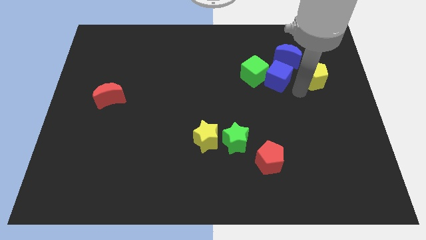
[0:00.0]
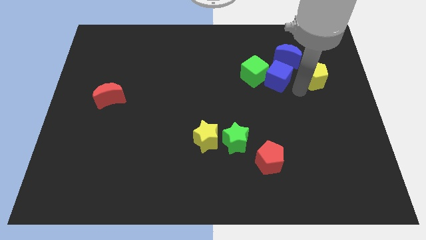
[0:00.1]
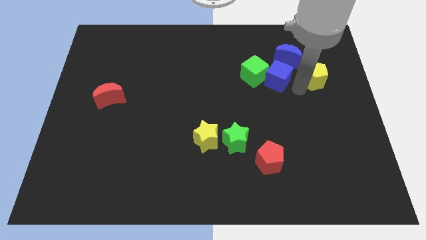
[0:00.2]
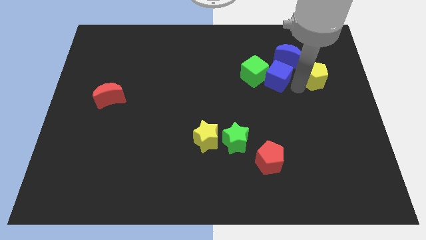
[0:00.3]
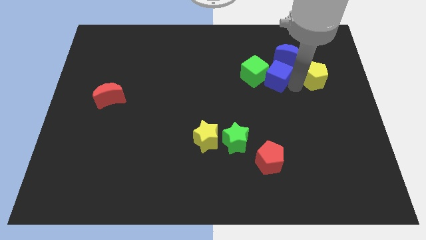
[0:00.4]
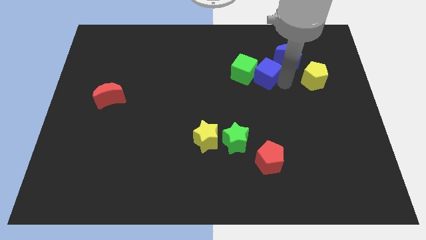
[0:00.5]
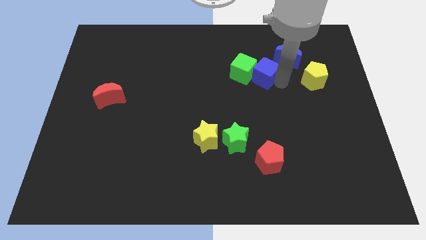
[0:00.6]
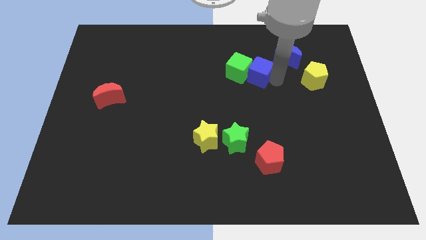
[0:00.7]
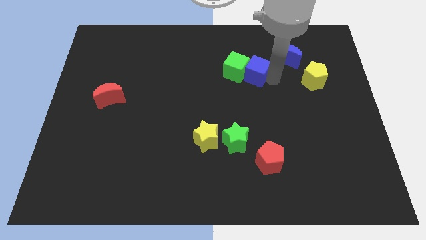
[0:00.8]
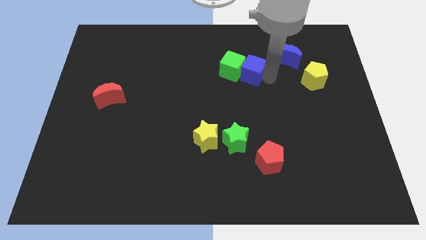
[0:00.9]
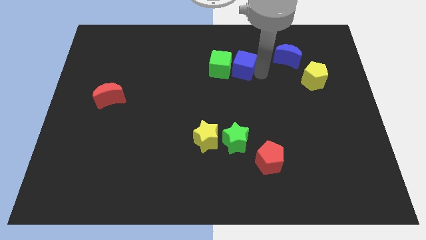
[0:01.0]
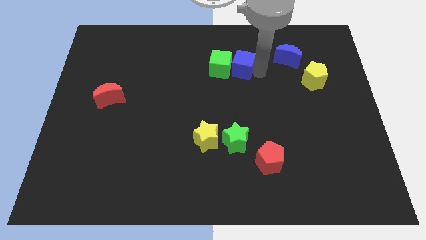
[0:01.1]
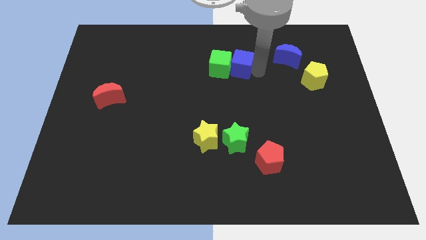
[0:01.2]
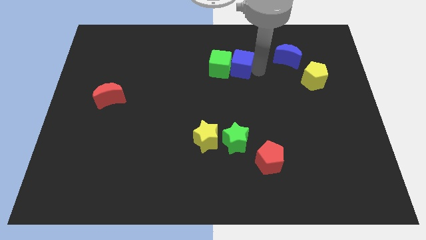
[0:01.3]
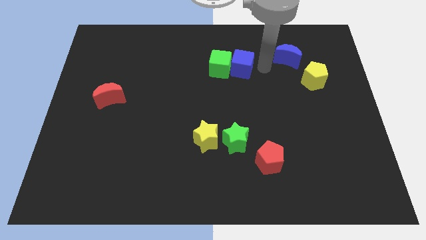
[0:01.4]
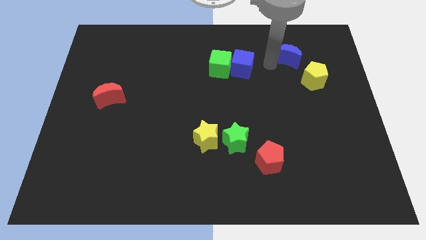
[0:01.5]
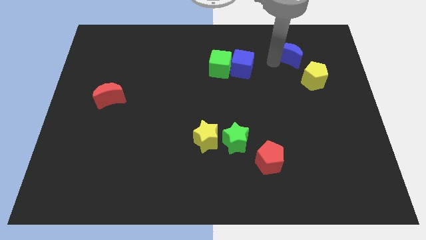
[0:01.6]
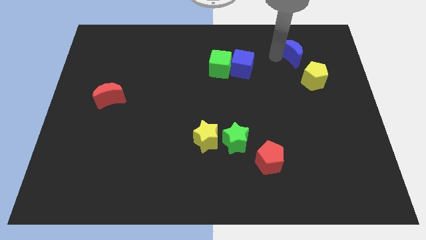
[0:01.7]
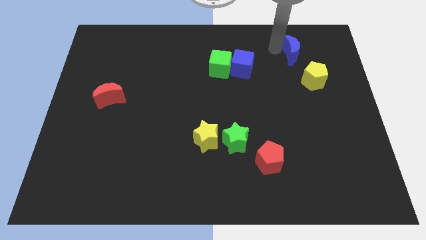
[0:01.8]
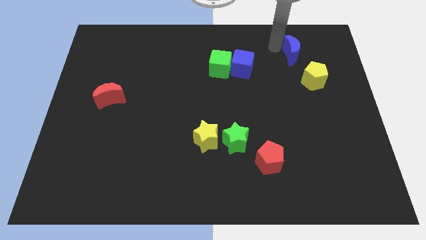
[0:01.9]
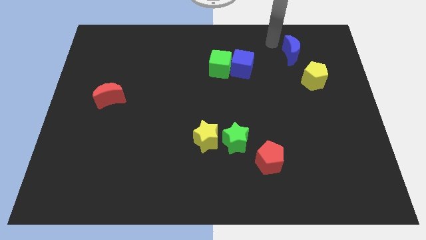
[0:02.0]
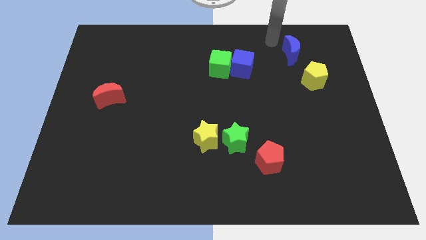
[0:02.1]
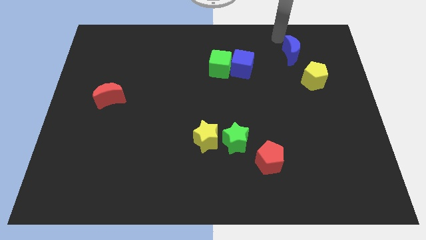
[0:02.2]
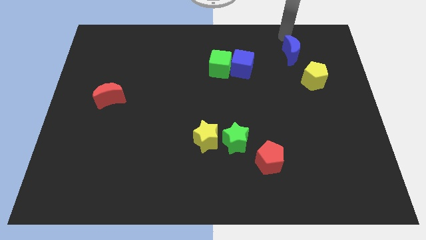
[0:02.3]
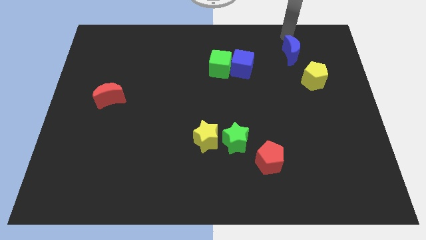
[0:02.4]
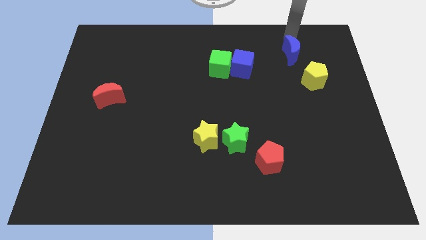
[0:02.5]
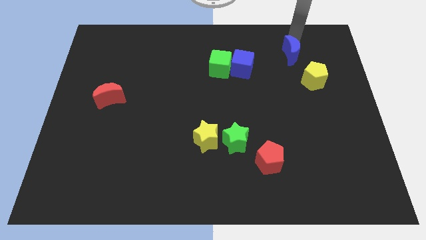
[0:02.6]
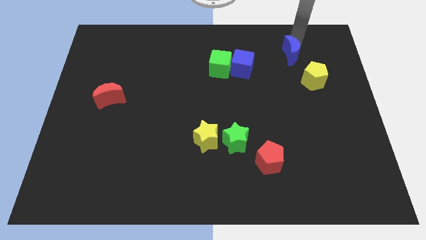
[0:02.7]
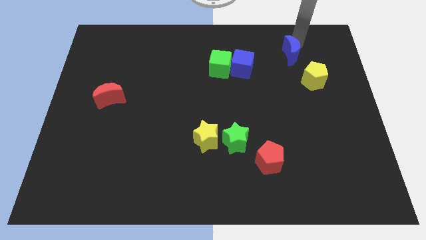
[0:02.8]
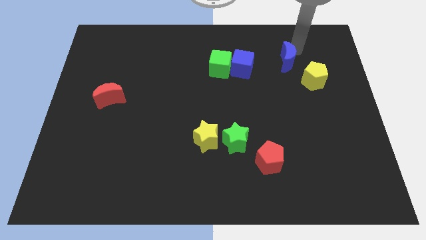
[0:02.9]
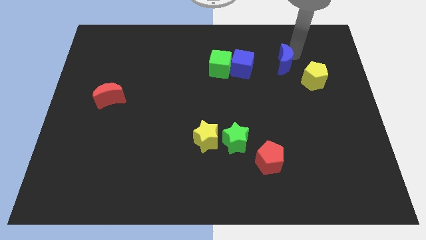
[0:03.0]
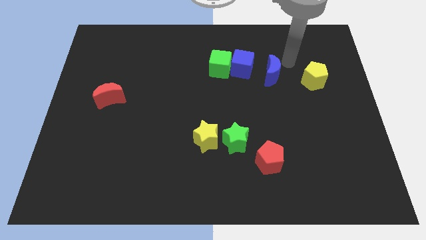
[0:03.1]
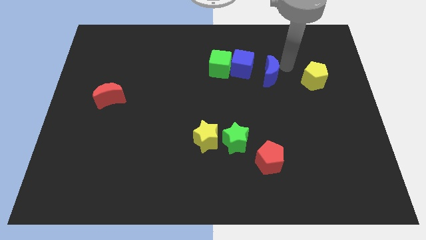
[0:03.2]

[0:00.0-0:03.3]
place blue moon in between yellow pentagon and blue cube

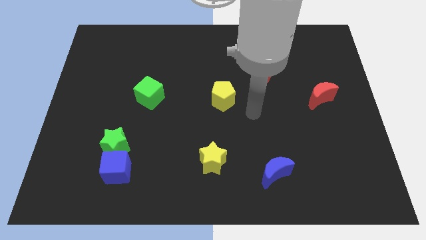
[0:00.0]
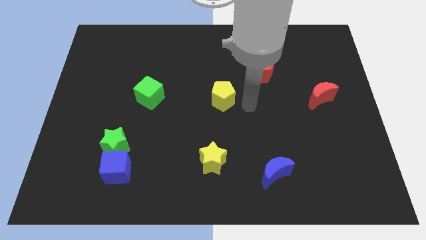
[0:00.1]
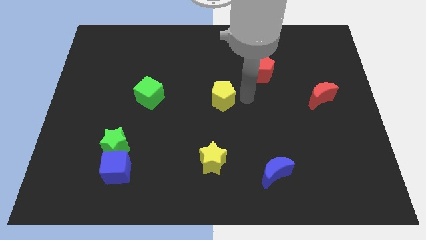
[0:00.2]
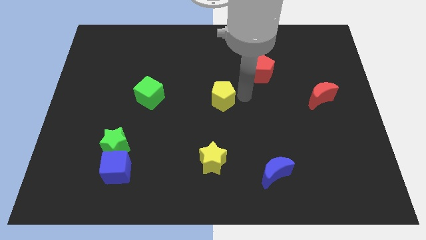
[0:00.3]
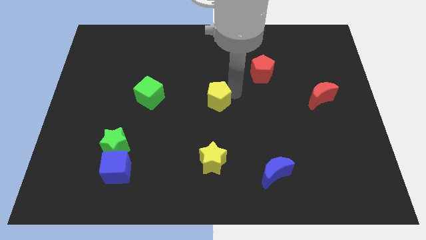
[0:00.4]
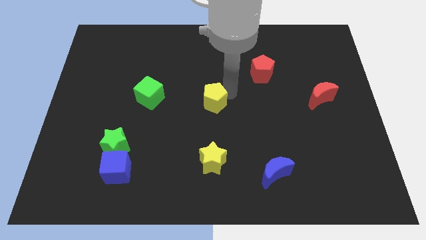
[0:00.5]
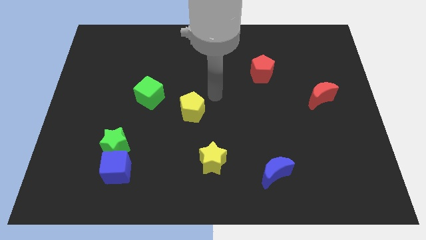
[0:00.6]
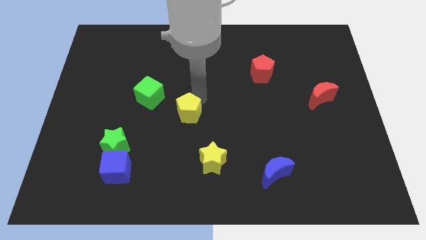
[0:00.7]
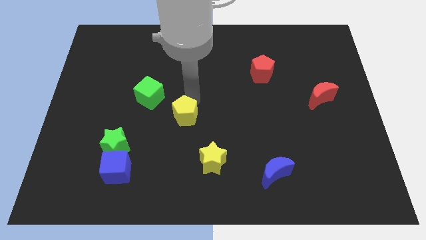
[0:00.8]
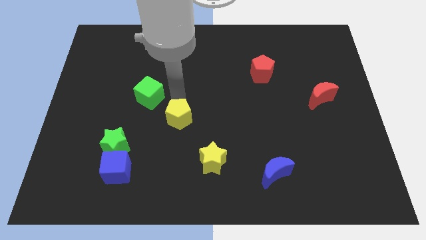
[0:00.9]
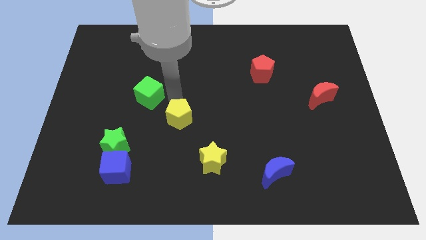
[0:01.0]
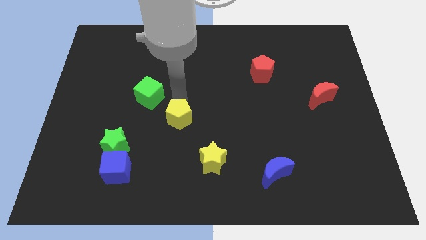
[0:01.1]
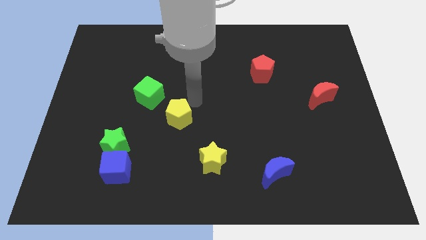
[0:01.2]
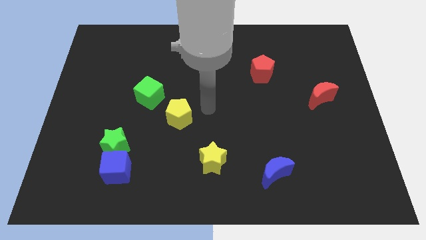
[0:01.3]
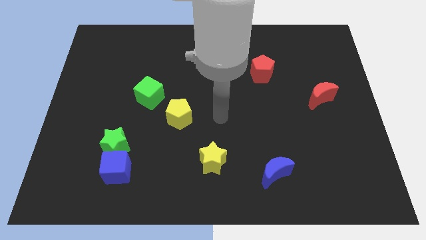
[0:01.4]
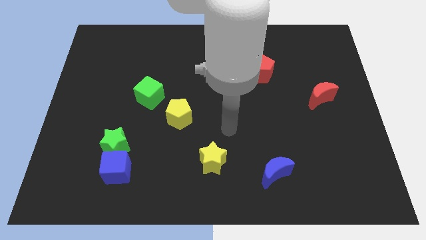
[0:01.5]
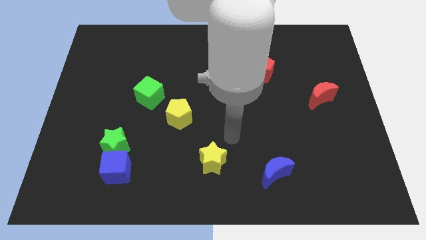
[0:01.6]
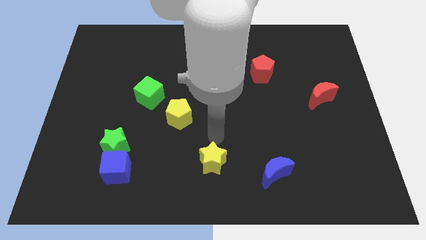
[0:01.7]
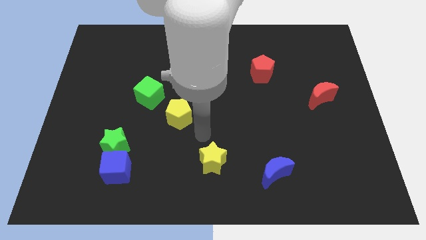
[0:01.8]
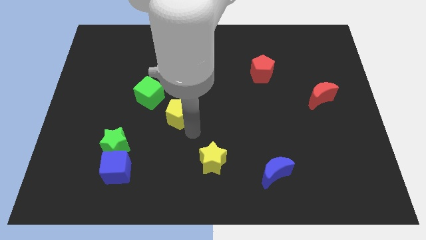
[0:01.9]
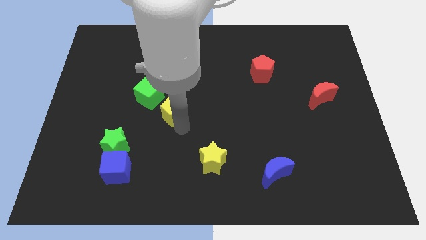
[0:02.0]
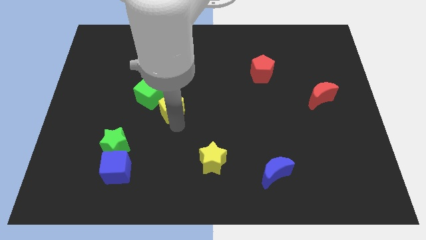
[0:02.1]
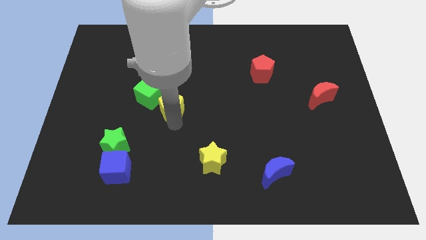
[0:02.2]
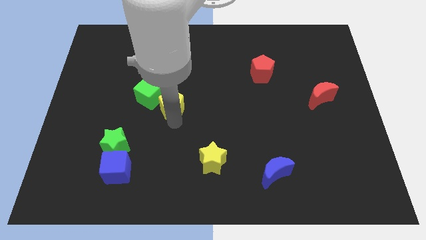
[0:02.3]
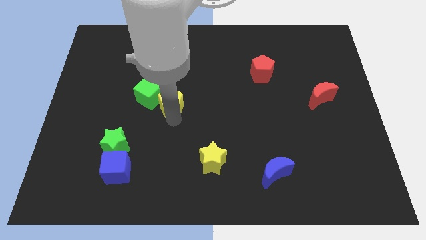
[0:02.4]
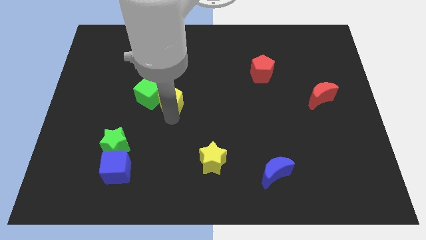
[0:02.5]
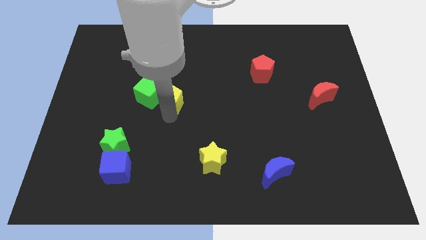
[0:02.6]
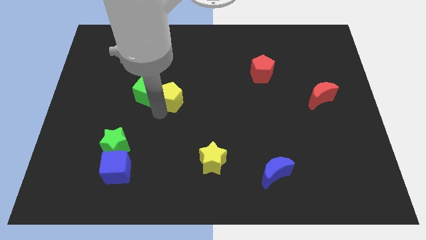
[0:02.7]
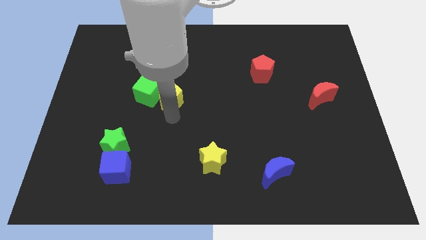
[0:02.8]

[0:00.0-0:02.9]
place the yellow pentagon in between the green star and red pentagon

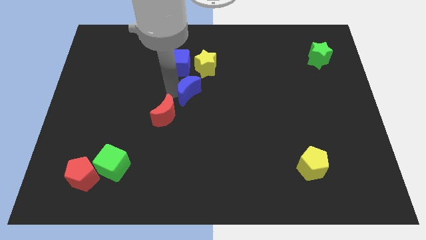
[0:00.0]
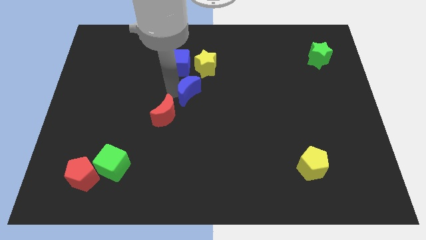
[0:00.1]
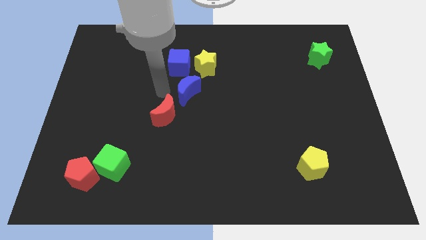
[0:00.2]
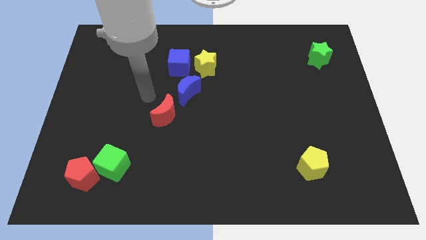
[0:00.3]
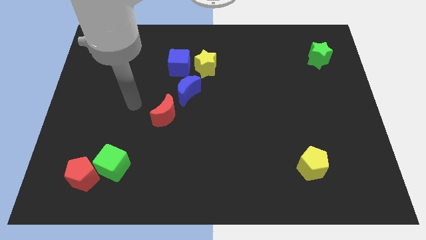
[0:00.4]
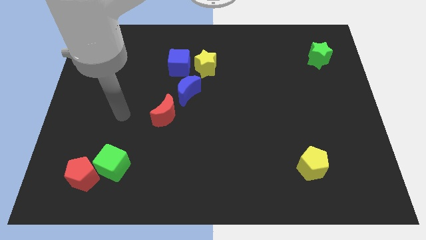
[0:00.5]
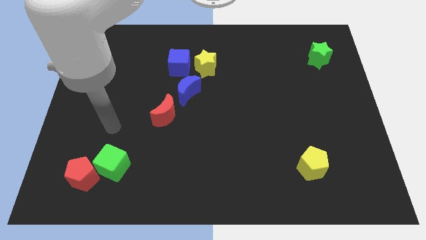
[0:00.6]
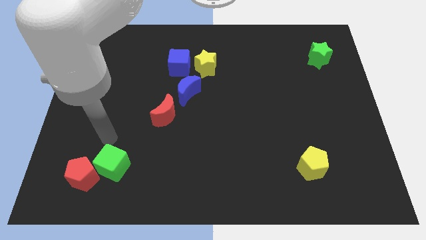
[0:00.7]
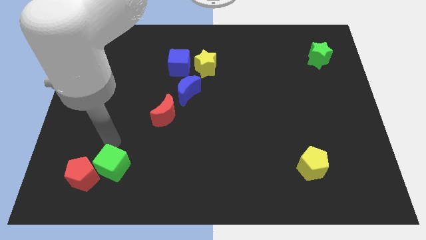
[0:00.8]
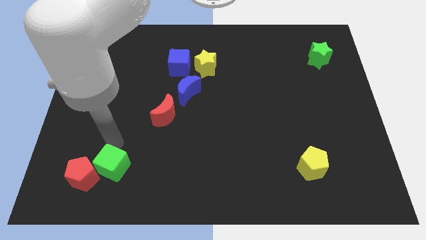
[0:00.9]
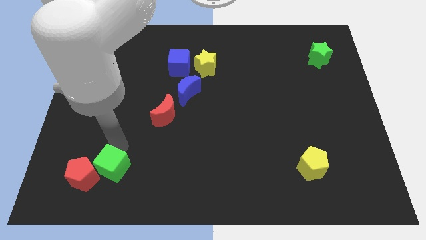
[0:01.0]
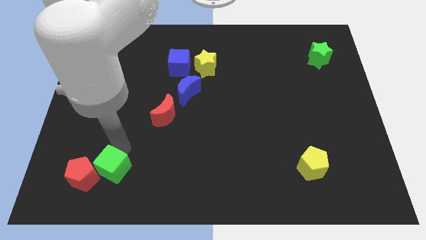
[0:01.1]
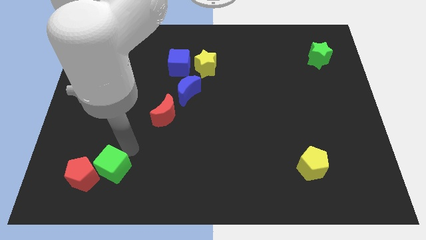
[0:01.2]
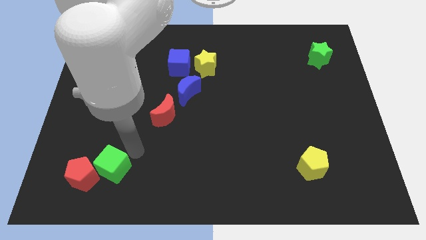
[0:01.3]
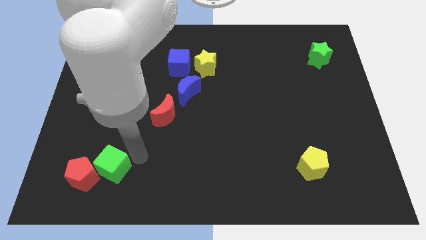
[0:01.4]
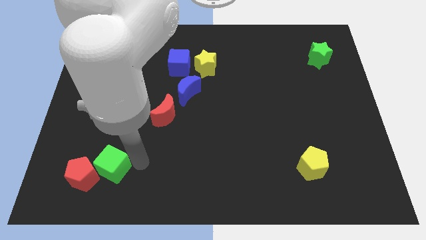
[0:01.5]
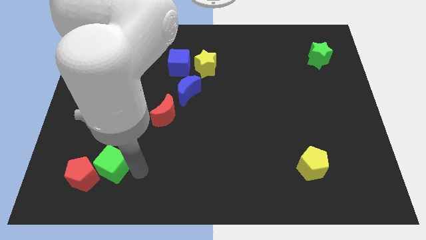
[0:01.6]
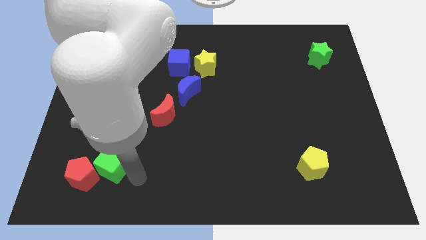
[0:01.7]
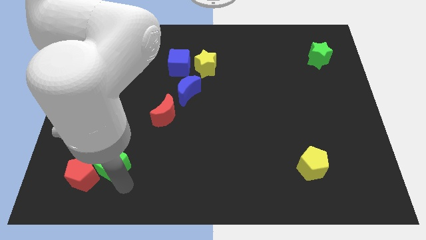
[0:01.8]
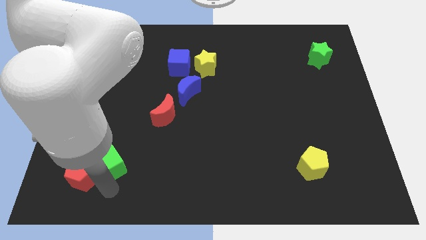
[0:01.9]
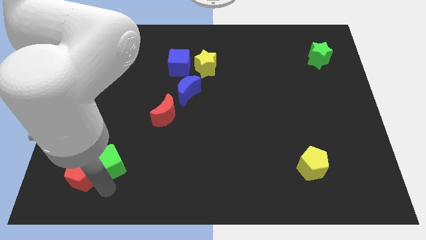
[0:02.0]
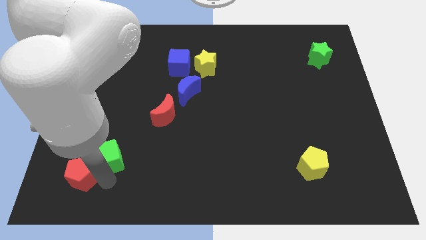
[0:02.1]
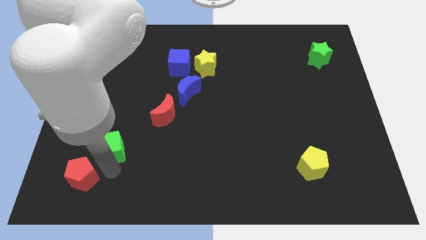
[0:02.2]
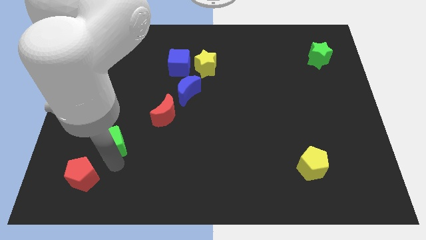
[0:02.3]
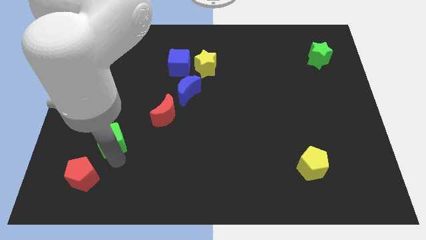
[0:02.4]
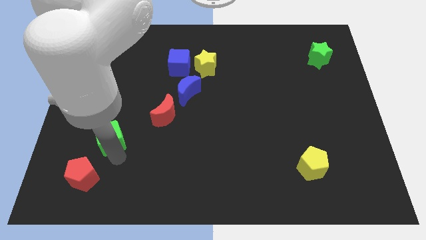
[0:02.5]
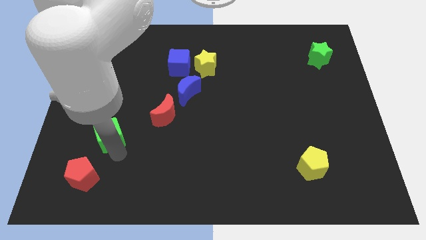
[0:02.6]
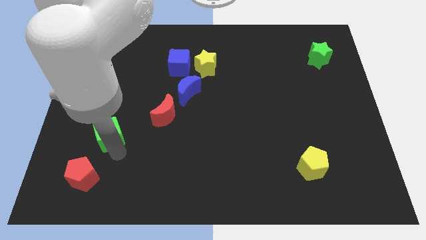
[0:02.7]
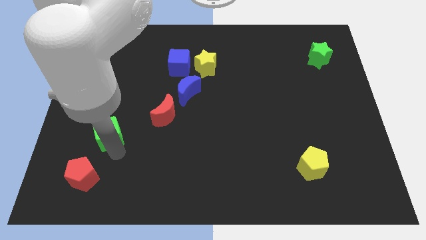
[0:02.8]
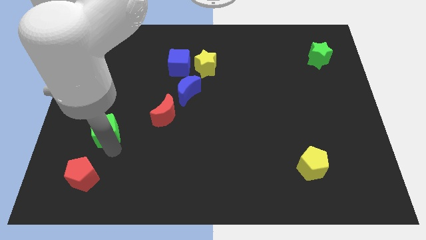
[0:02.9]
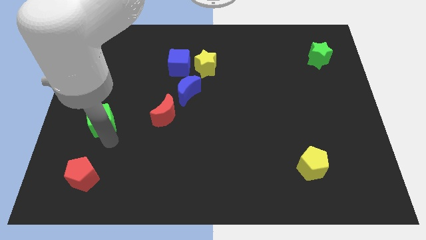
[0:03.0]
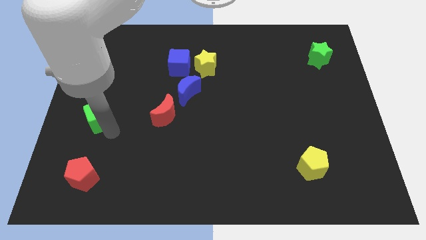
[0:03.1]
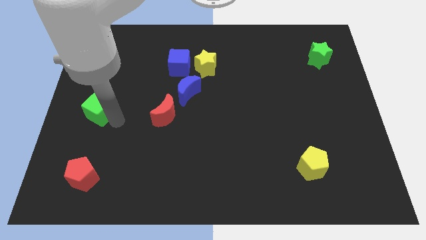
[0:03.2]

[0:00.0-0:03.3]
place the green cube above the red pentagon
